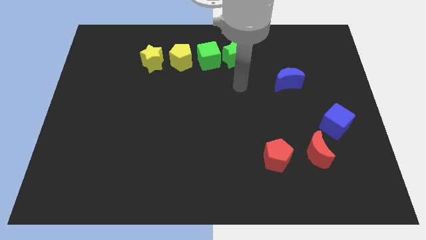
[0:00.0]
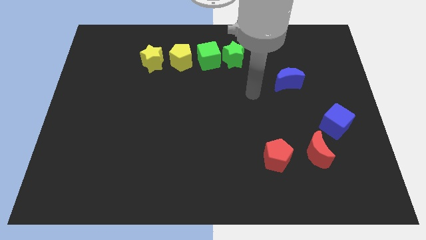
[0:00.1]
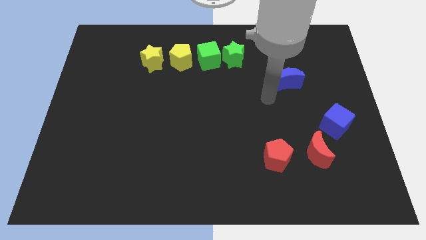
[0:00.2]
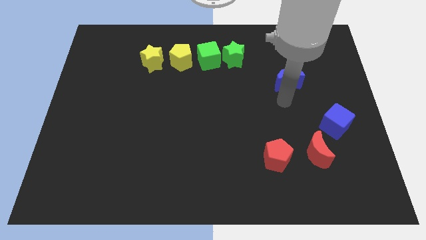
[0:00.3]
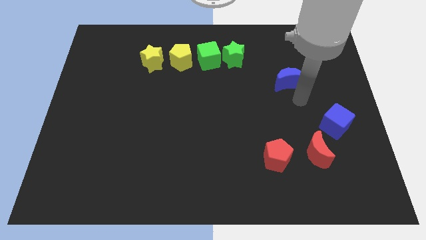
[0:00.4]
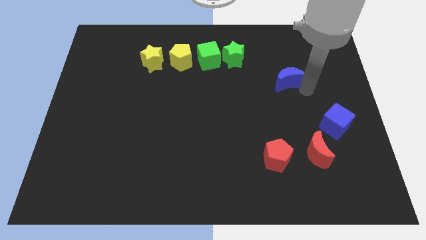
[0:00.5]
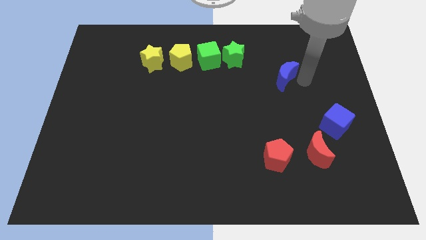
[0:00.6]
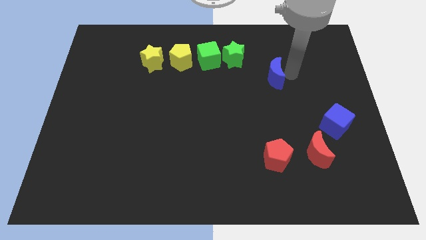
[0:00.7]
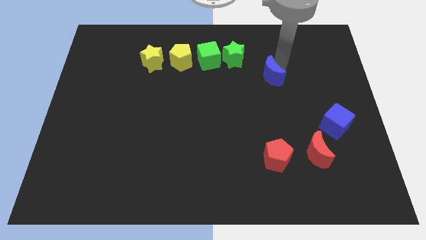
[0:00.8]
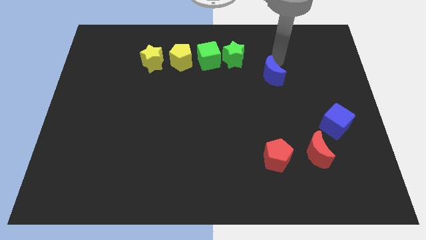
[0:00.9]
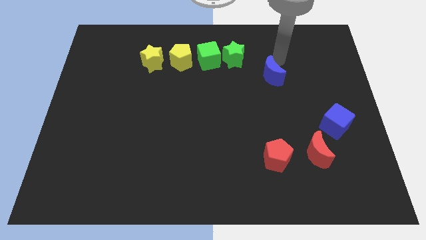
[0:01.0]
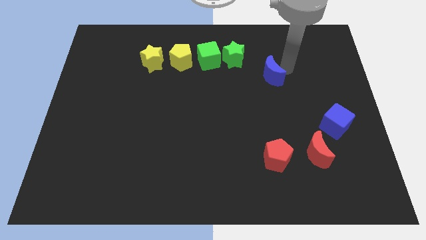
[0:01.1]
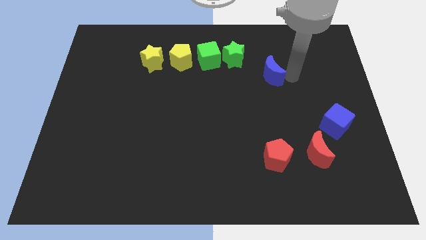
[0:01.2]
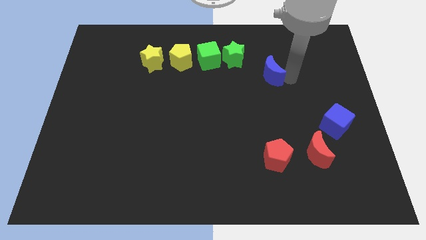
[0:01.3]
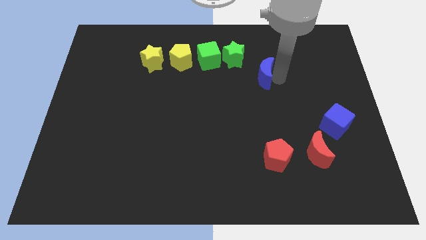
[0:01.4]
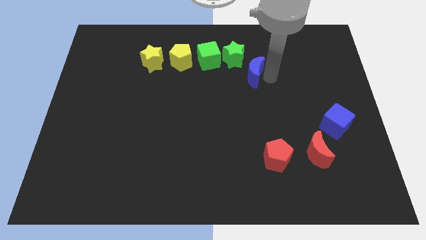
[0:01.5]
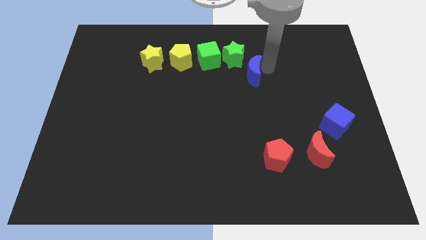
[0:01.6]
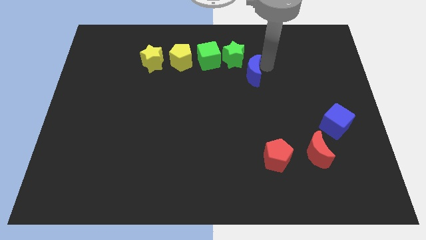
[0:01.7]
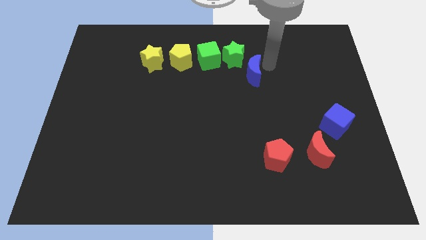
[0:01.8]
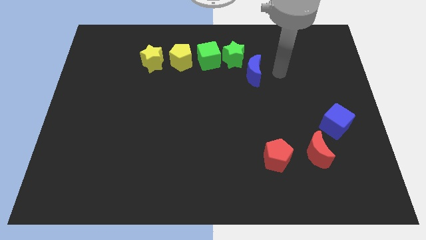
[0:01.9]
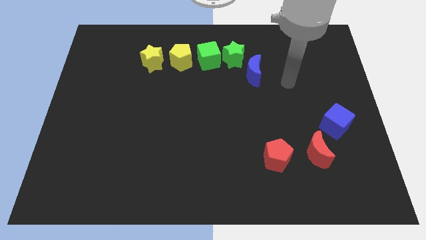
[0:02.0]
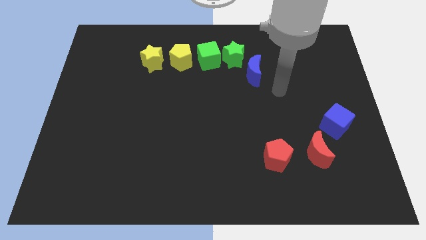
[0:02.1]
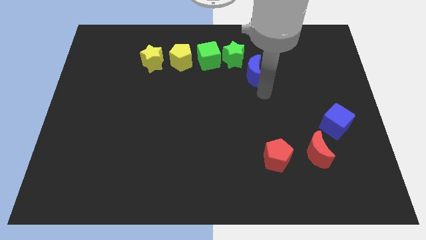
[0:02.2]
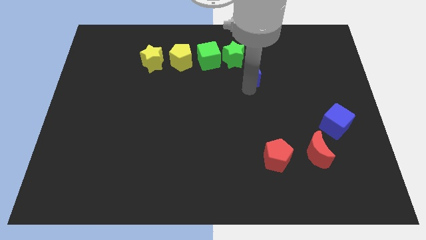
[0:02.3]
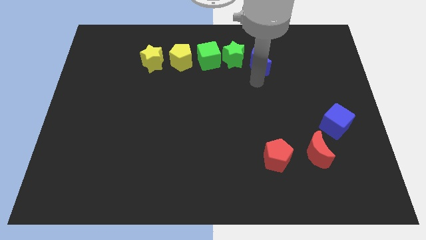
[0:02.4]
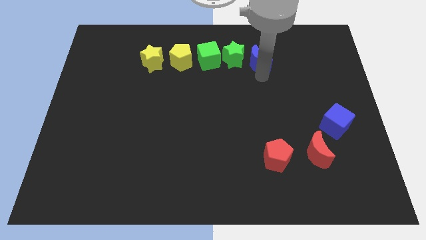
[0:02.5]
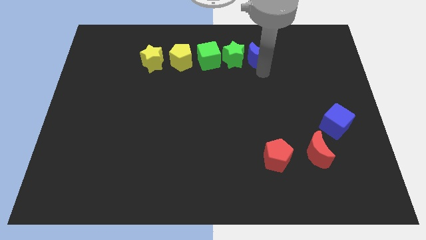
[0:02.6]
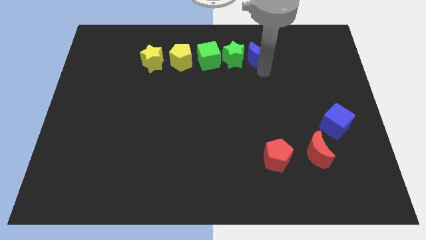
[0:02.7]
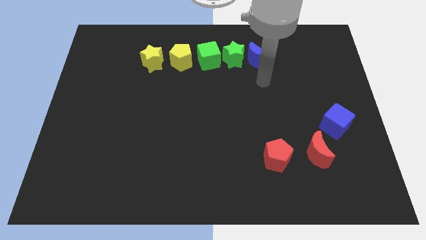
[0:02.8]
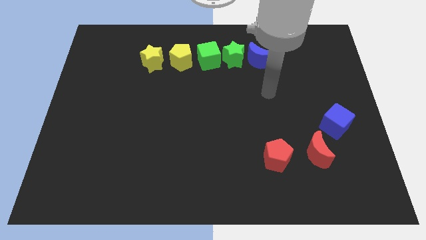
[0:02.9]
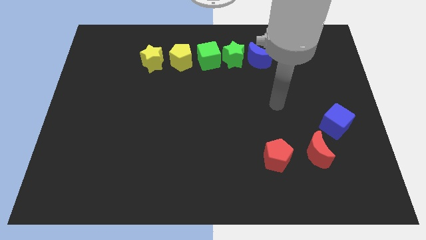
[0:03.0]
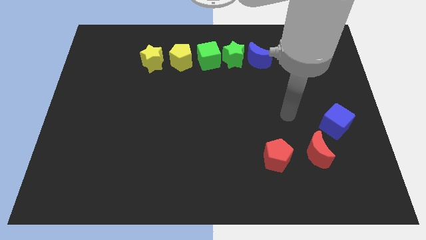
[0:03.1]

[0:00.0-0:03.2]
move blue moon to the right of green star

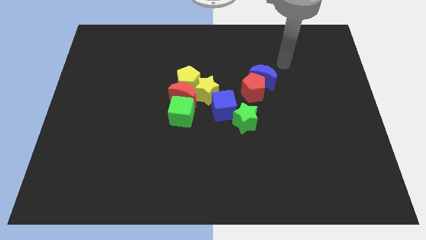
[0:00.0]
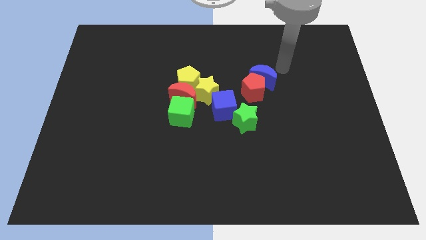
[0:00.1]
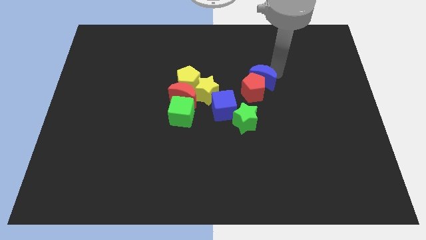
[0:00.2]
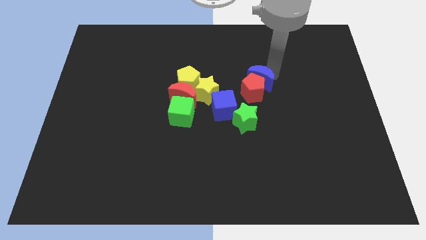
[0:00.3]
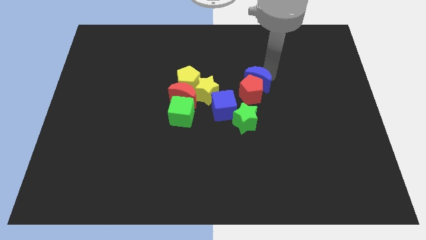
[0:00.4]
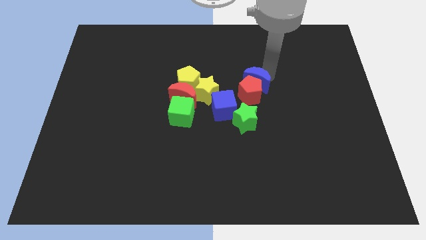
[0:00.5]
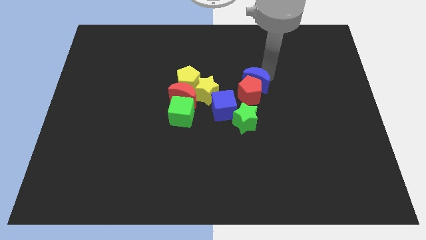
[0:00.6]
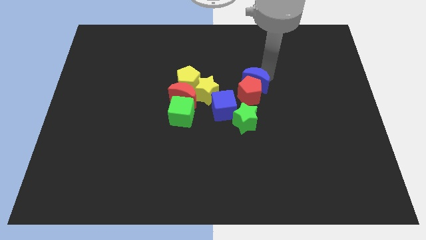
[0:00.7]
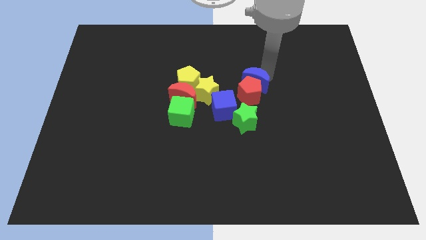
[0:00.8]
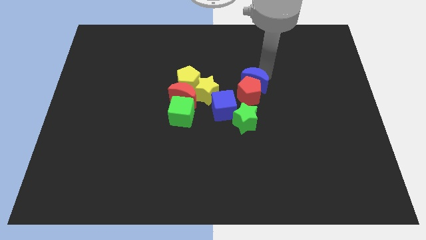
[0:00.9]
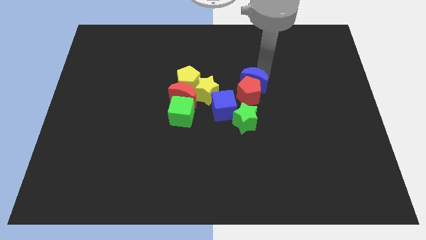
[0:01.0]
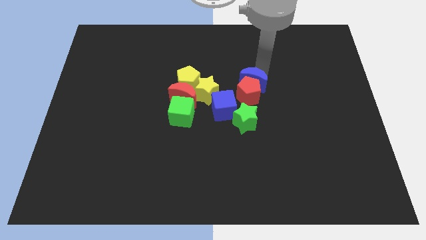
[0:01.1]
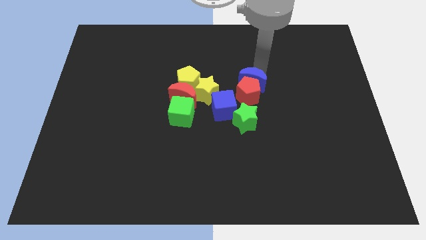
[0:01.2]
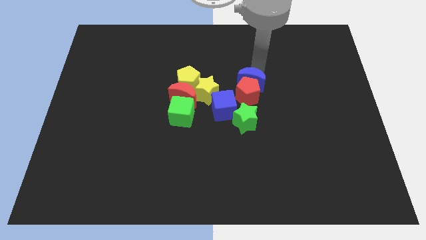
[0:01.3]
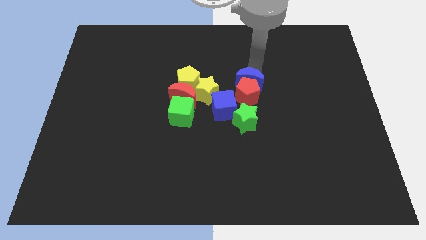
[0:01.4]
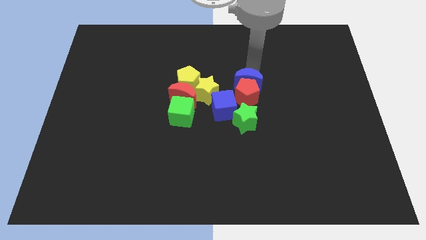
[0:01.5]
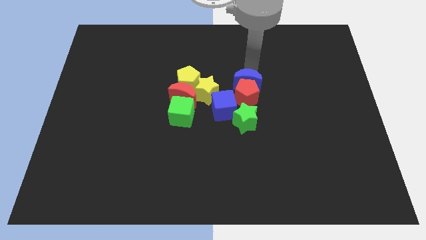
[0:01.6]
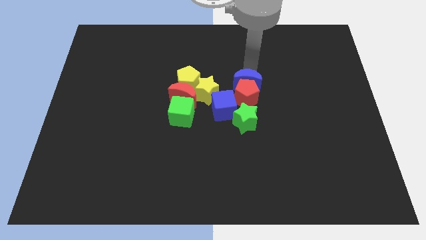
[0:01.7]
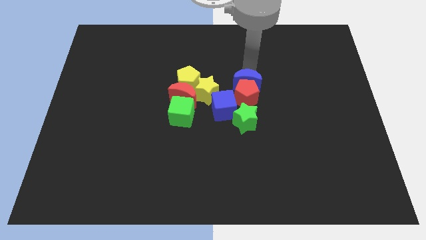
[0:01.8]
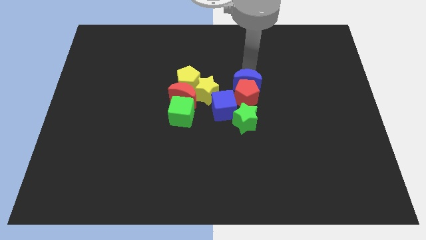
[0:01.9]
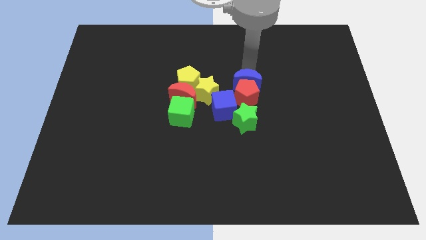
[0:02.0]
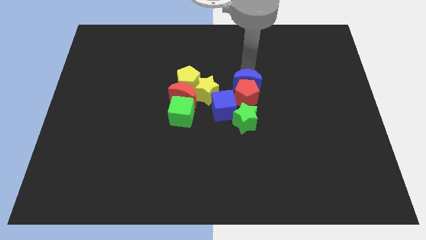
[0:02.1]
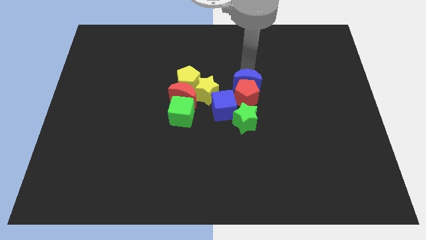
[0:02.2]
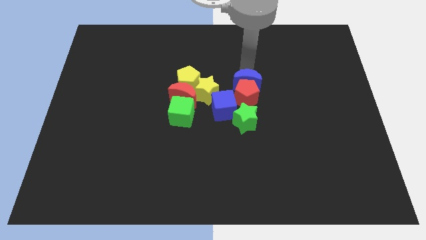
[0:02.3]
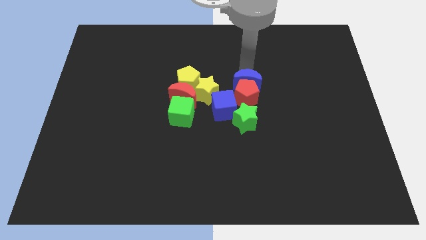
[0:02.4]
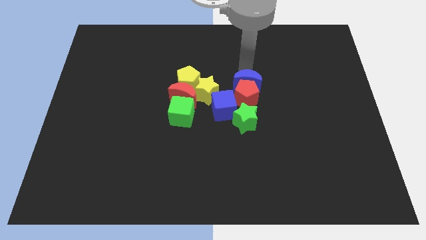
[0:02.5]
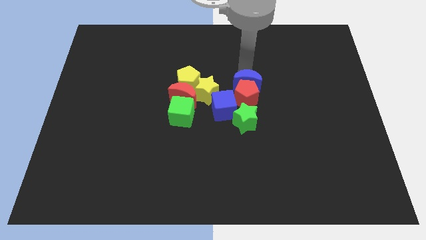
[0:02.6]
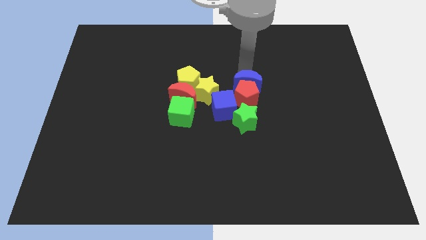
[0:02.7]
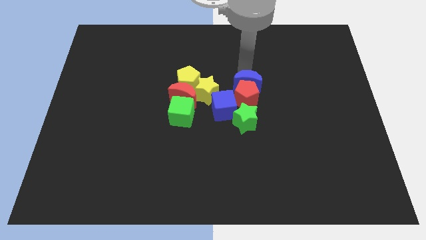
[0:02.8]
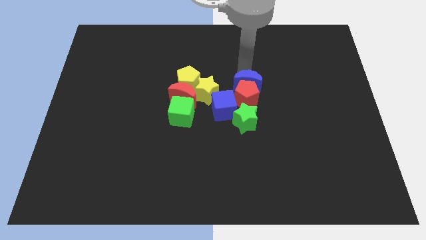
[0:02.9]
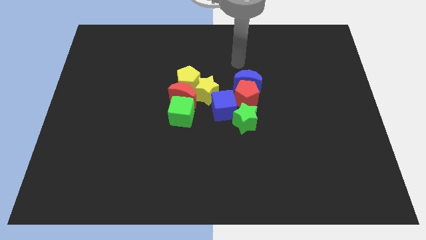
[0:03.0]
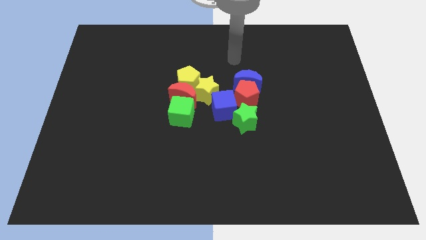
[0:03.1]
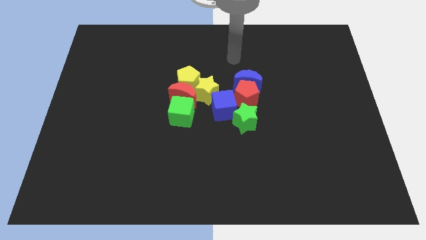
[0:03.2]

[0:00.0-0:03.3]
move the blue crescent into the red pentagon

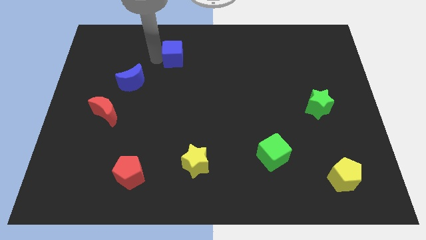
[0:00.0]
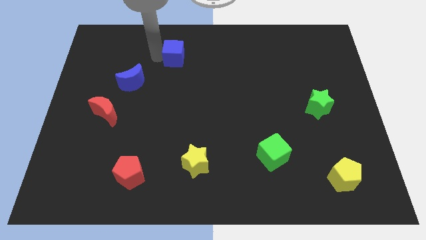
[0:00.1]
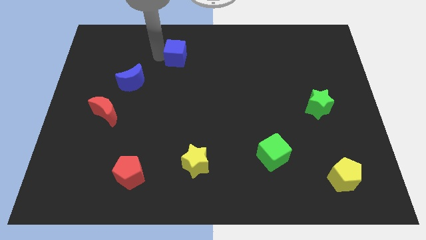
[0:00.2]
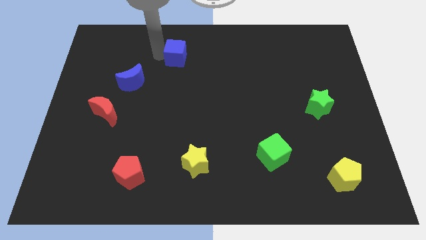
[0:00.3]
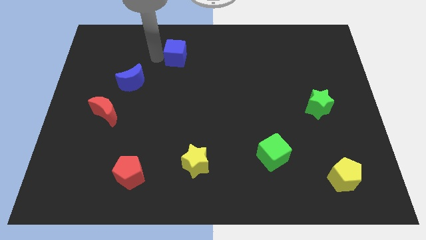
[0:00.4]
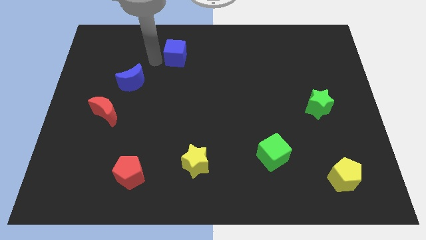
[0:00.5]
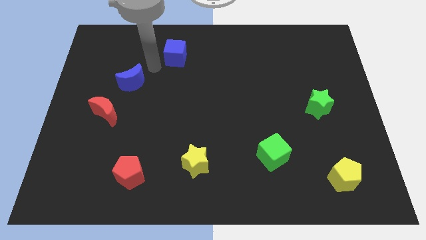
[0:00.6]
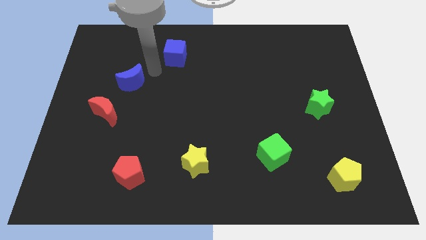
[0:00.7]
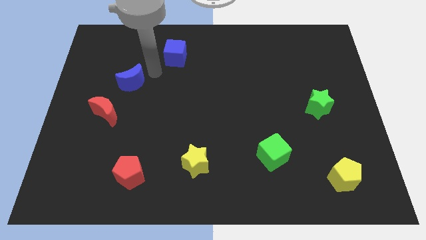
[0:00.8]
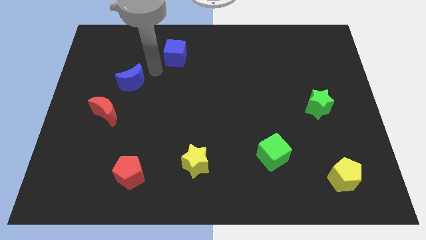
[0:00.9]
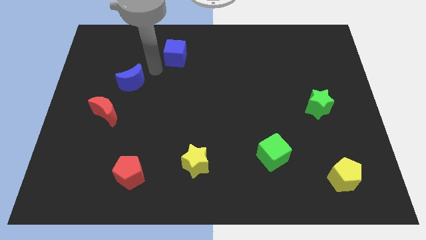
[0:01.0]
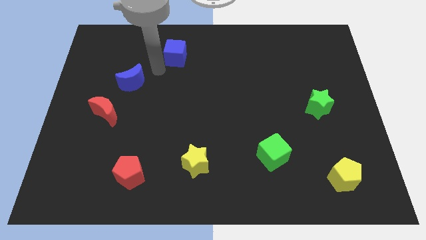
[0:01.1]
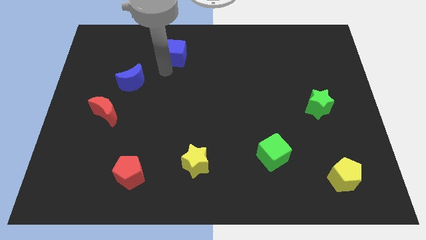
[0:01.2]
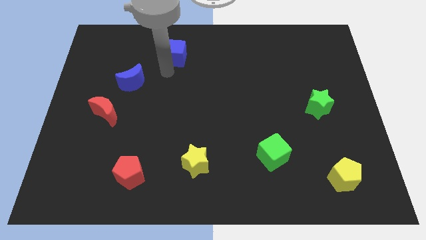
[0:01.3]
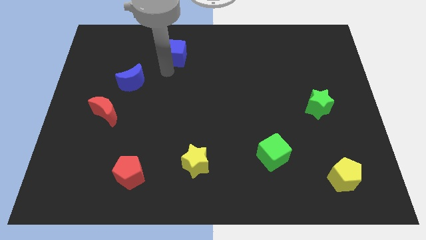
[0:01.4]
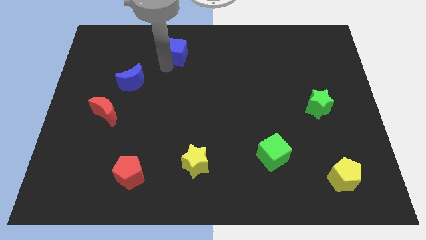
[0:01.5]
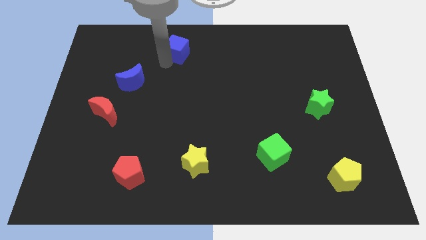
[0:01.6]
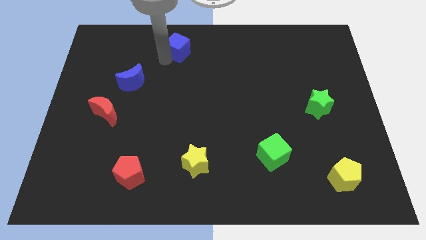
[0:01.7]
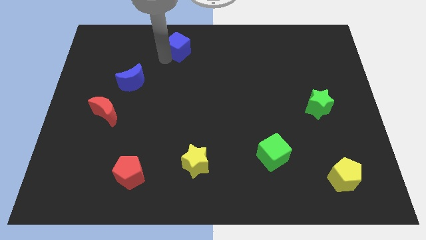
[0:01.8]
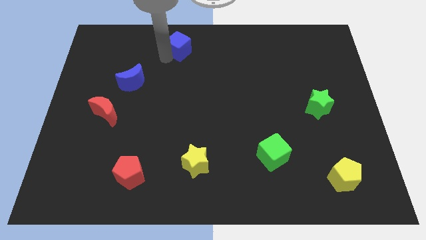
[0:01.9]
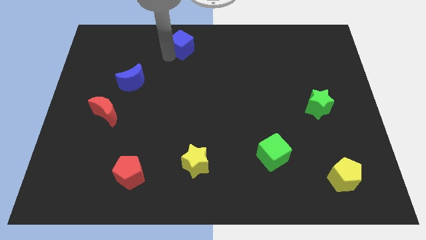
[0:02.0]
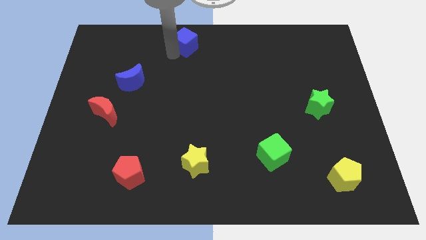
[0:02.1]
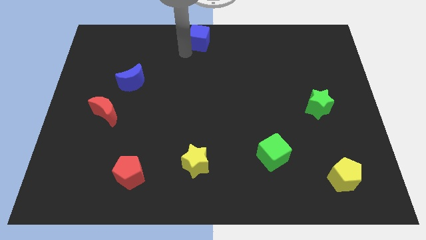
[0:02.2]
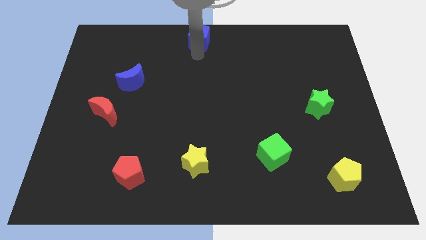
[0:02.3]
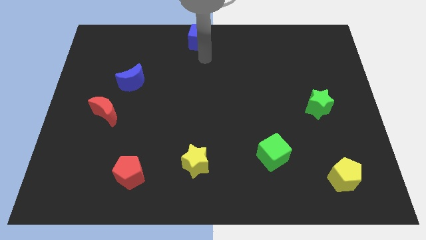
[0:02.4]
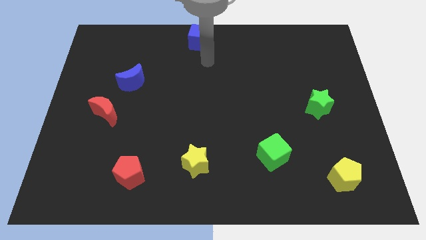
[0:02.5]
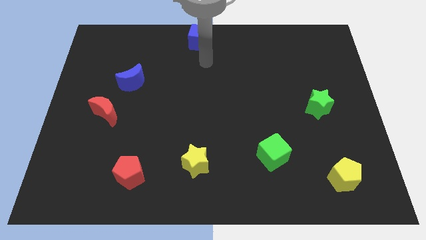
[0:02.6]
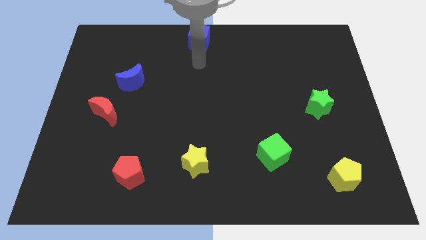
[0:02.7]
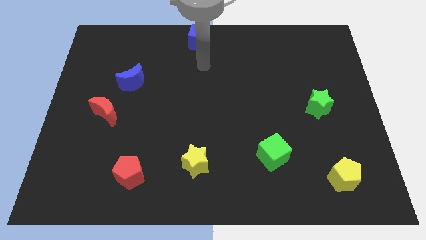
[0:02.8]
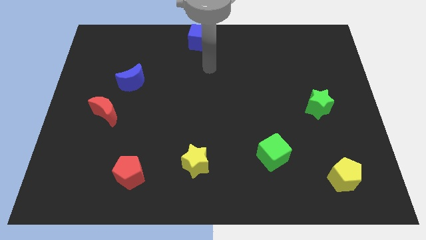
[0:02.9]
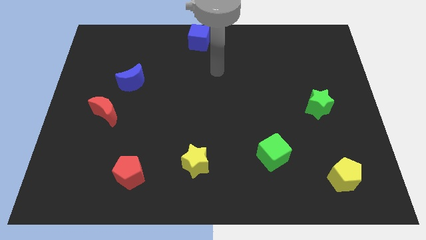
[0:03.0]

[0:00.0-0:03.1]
push the blue cube to the top center of the board
